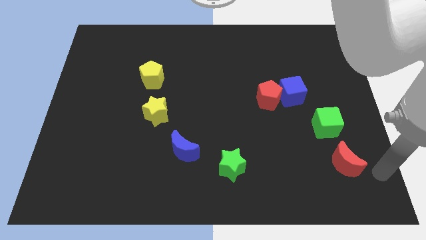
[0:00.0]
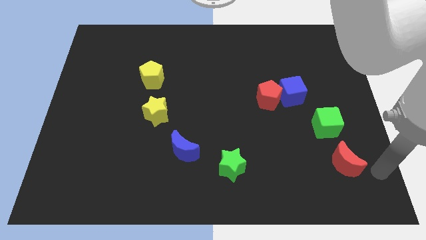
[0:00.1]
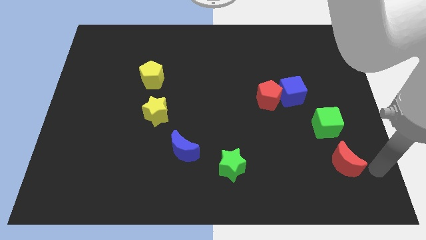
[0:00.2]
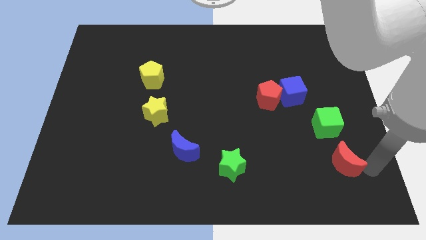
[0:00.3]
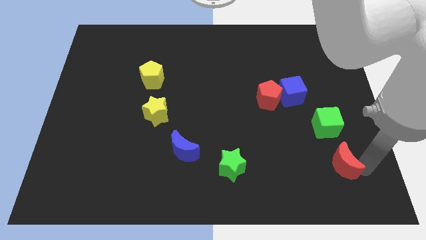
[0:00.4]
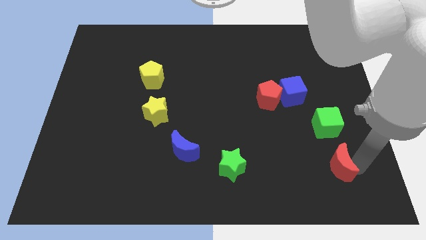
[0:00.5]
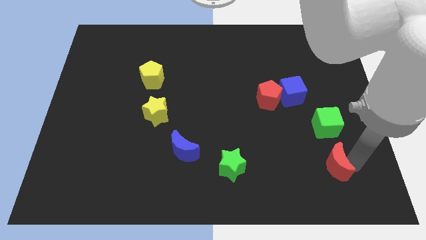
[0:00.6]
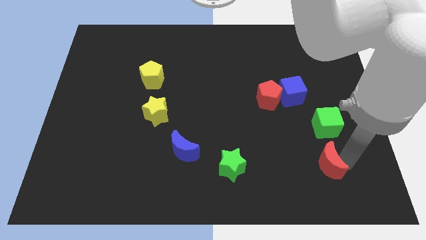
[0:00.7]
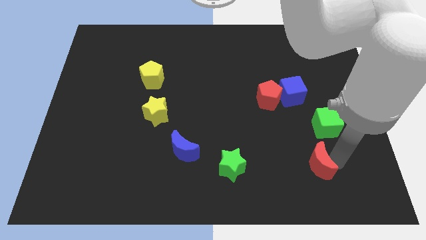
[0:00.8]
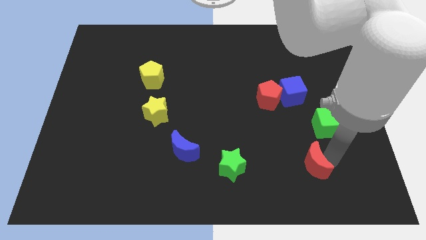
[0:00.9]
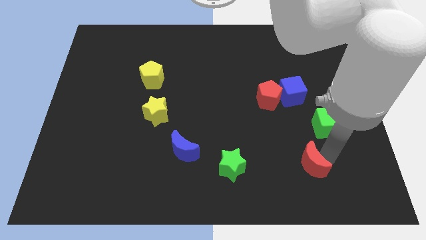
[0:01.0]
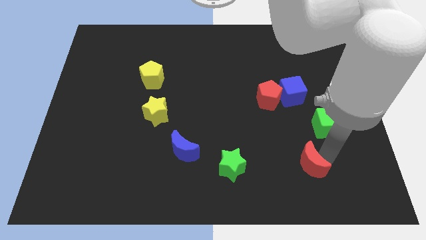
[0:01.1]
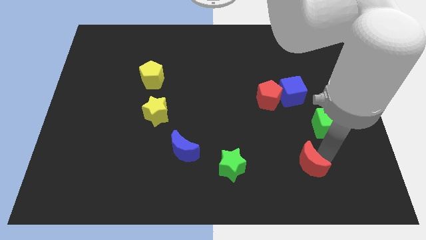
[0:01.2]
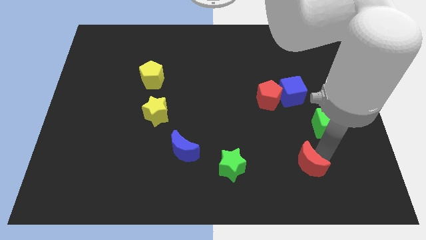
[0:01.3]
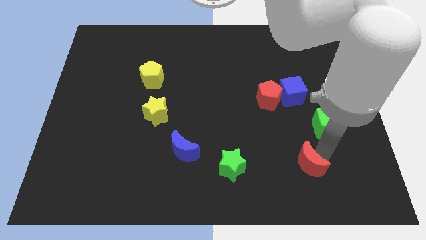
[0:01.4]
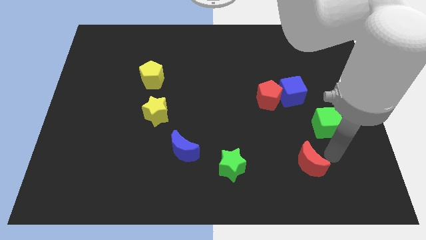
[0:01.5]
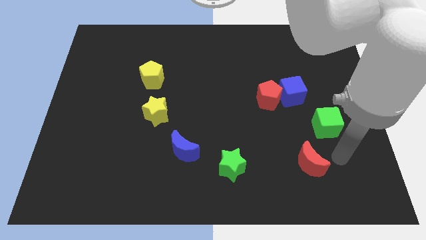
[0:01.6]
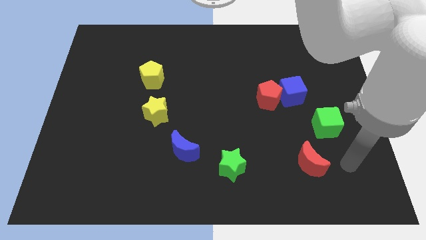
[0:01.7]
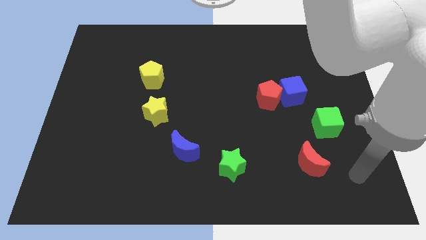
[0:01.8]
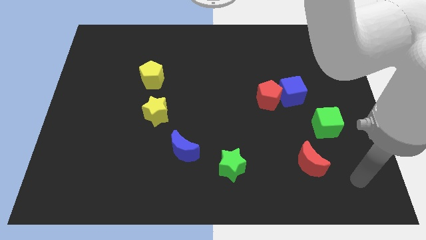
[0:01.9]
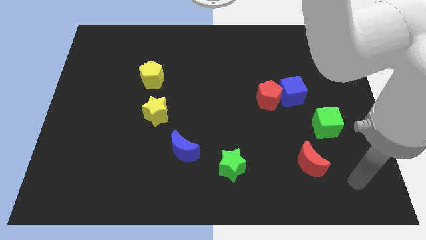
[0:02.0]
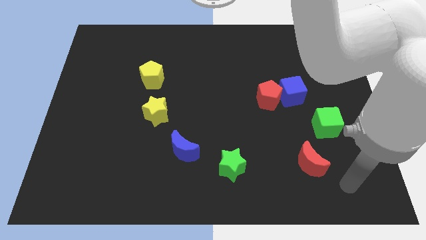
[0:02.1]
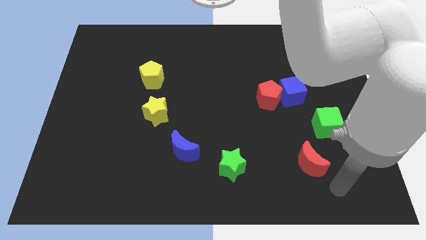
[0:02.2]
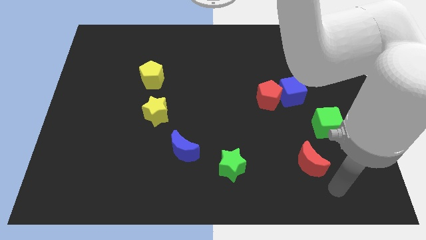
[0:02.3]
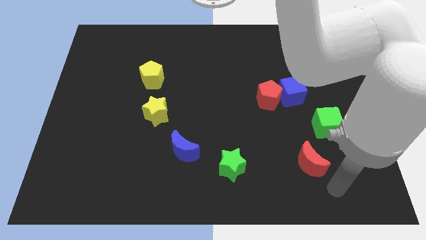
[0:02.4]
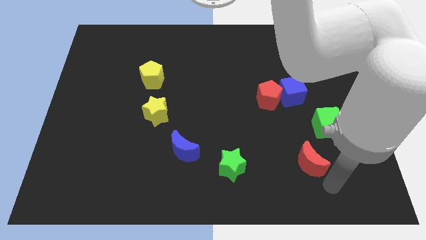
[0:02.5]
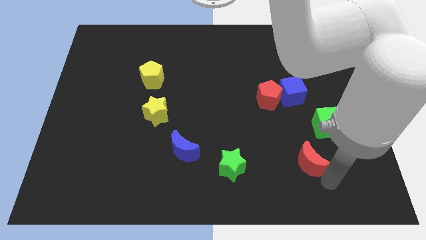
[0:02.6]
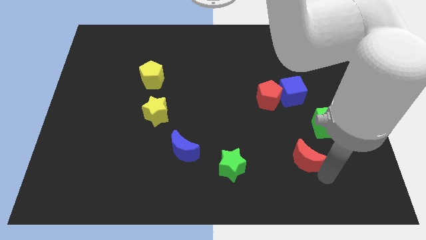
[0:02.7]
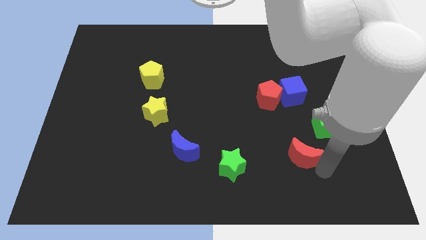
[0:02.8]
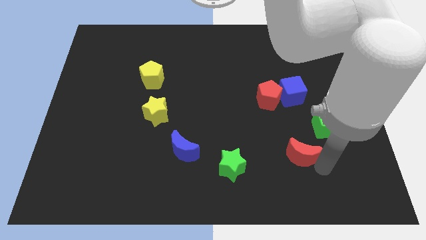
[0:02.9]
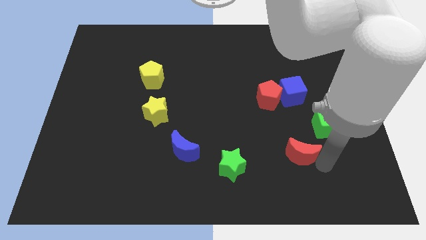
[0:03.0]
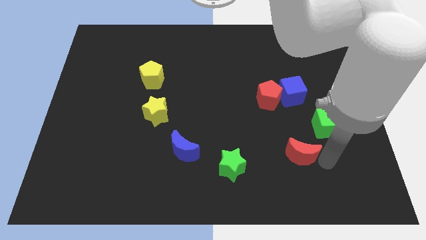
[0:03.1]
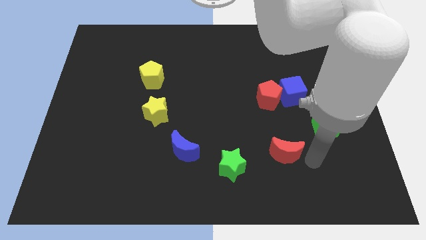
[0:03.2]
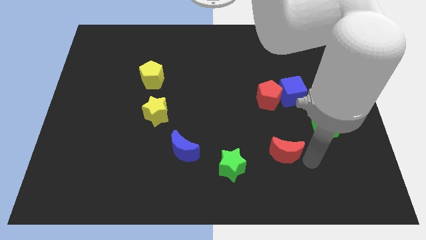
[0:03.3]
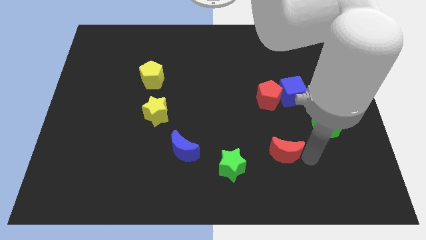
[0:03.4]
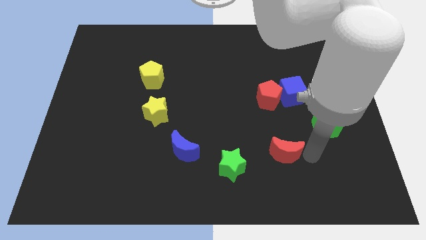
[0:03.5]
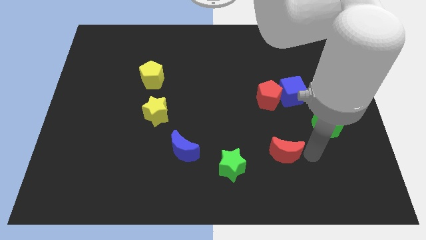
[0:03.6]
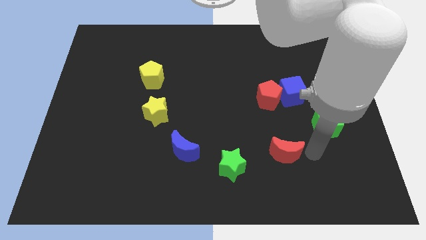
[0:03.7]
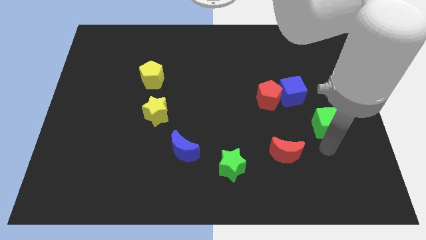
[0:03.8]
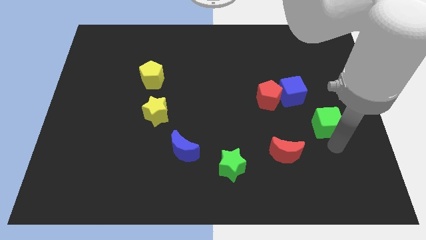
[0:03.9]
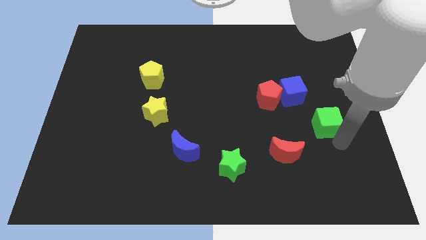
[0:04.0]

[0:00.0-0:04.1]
push the red moon to the vertical bottom side of the red pentagon

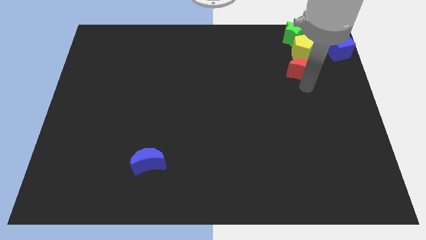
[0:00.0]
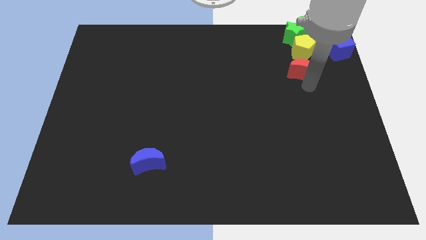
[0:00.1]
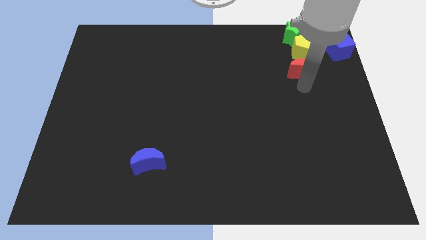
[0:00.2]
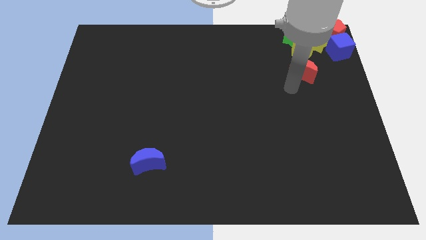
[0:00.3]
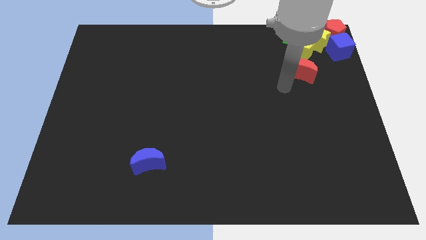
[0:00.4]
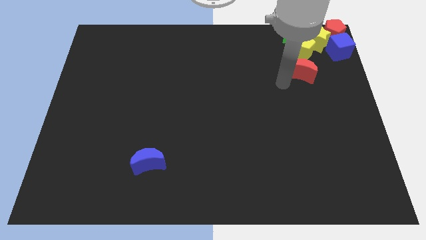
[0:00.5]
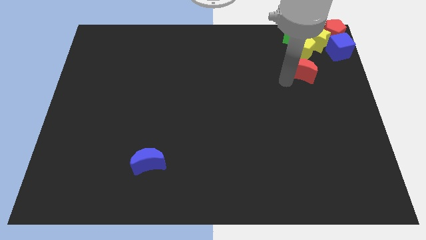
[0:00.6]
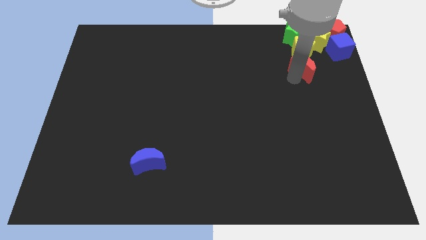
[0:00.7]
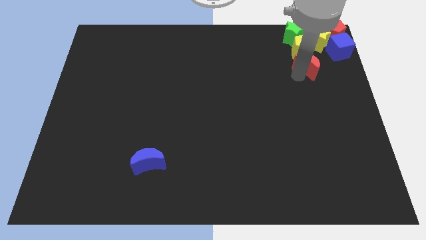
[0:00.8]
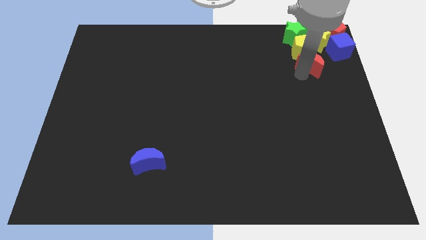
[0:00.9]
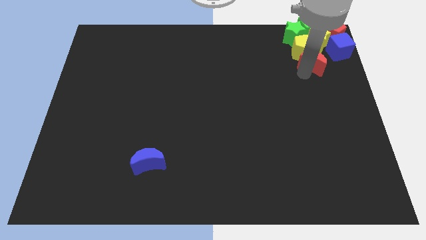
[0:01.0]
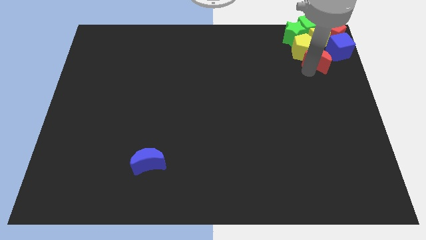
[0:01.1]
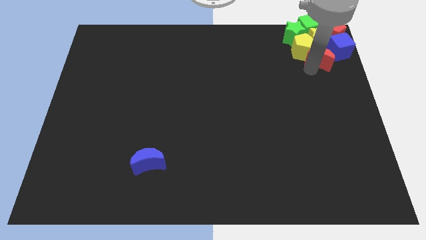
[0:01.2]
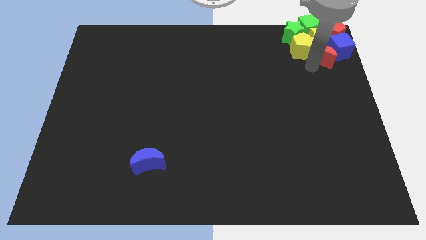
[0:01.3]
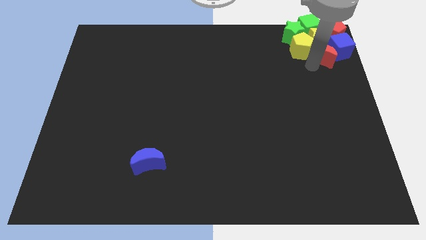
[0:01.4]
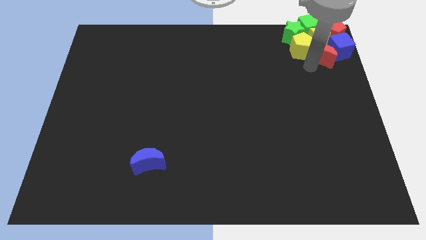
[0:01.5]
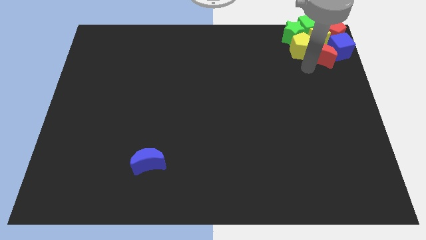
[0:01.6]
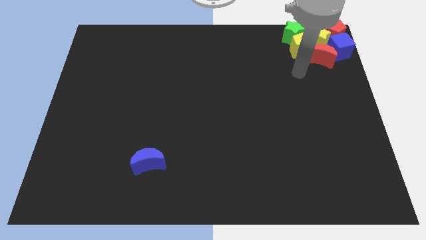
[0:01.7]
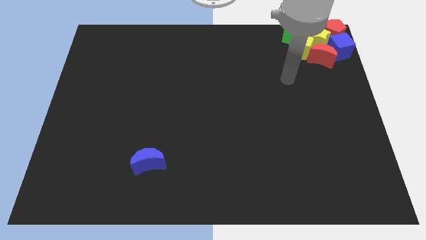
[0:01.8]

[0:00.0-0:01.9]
push the red crescent into the blue cube

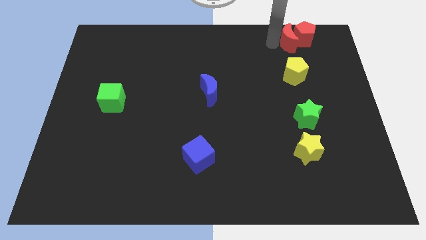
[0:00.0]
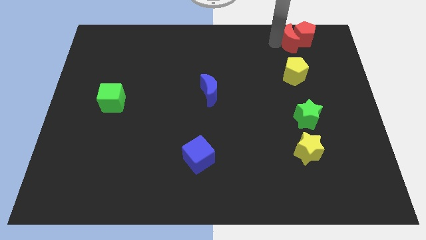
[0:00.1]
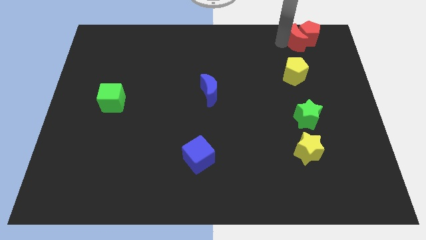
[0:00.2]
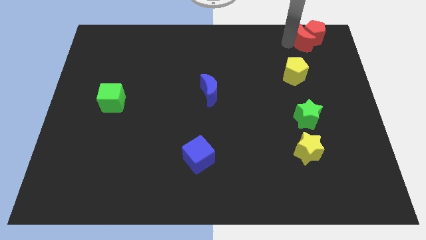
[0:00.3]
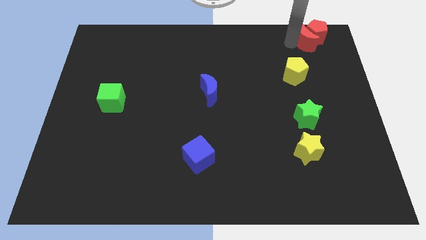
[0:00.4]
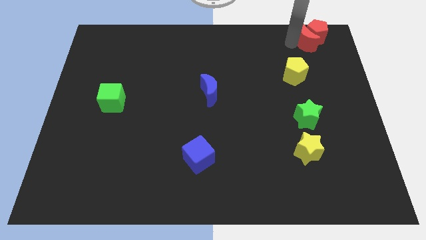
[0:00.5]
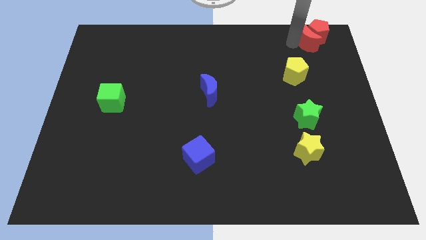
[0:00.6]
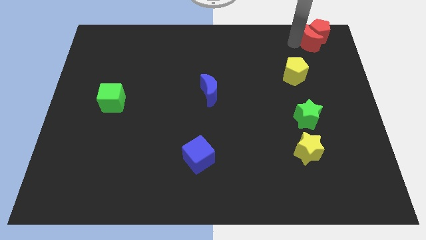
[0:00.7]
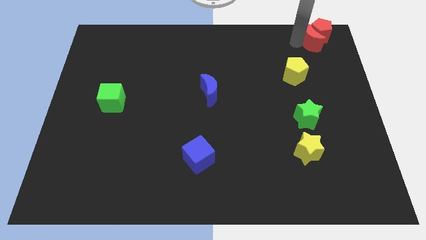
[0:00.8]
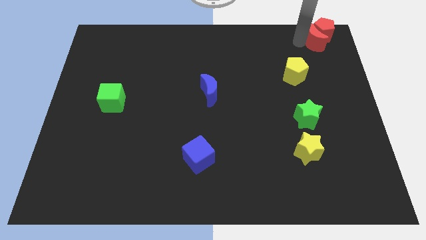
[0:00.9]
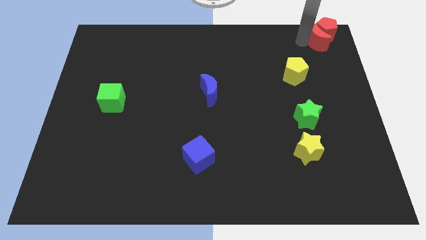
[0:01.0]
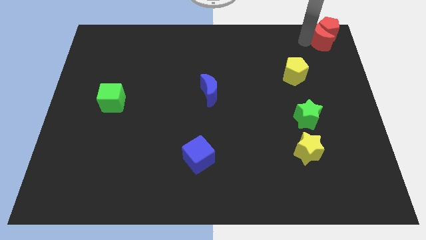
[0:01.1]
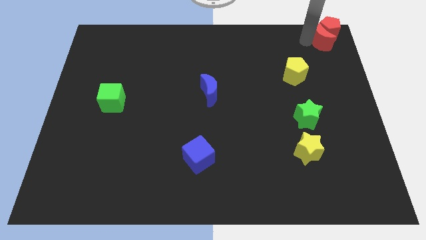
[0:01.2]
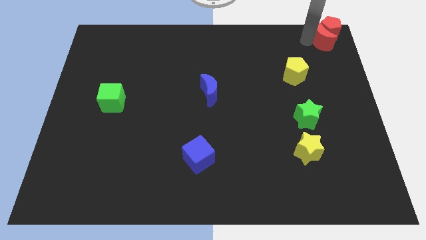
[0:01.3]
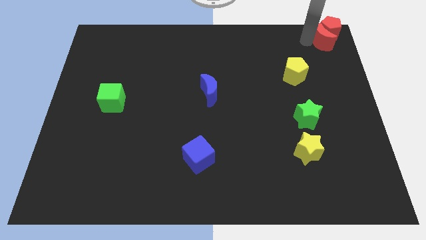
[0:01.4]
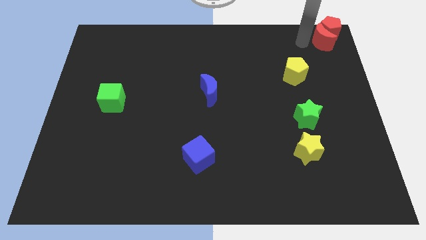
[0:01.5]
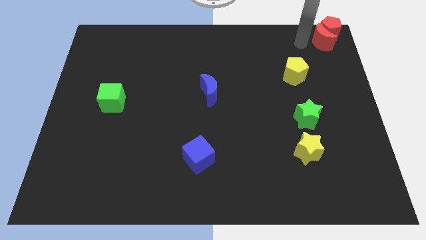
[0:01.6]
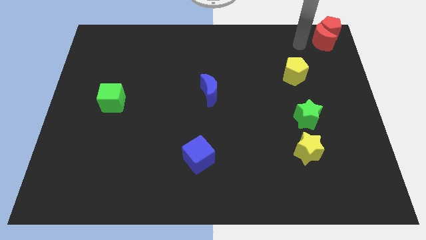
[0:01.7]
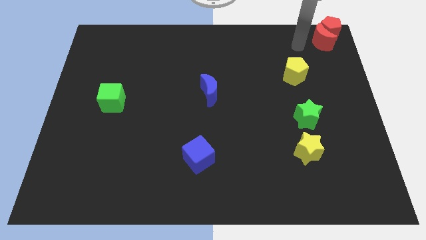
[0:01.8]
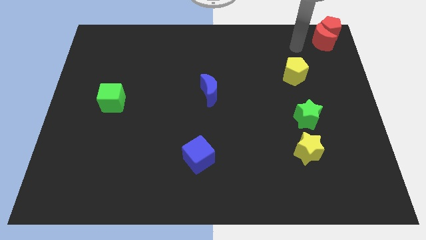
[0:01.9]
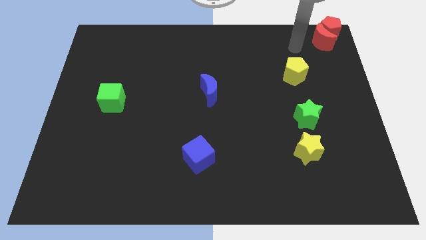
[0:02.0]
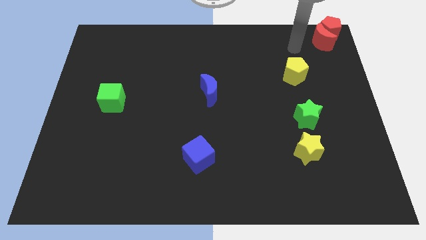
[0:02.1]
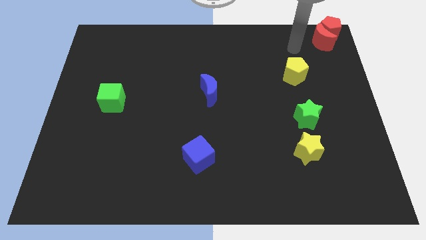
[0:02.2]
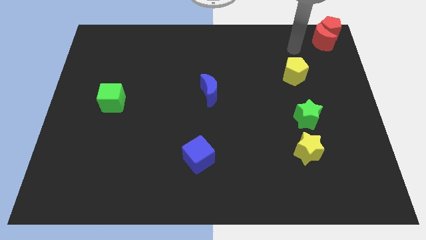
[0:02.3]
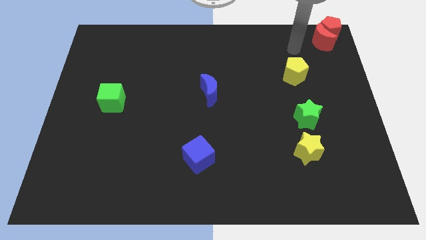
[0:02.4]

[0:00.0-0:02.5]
move the red crescent and red pentagon towards the top right of the board

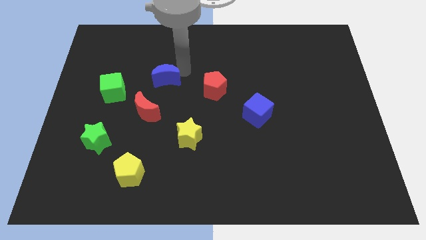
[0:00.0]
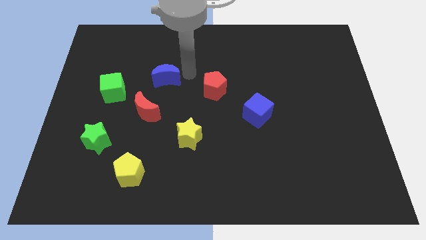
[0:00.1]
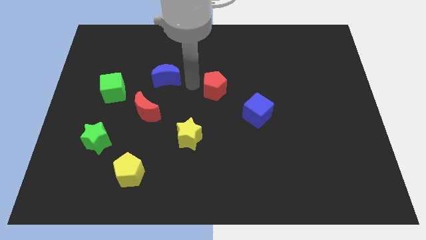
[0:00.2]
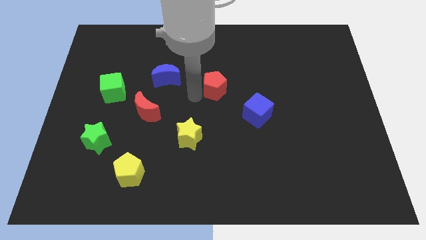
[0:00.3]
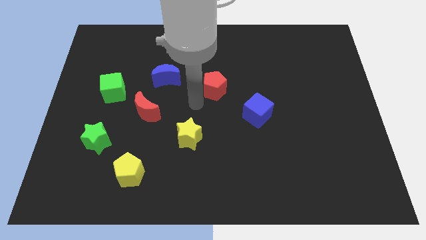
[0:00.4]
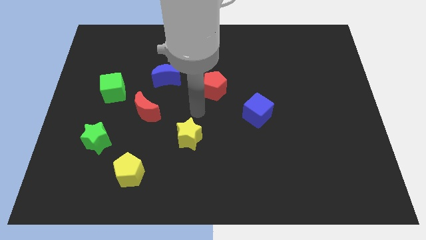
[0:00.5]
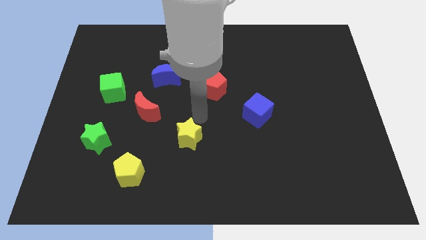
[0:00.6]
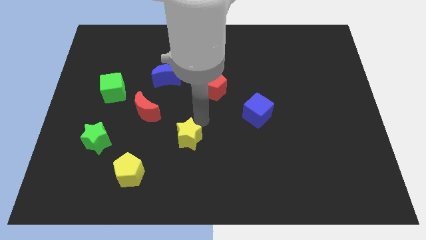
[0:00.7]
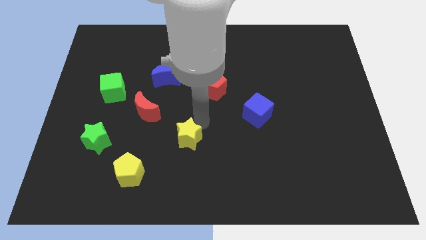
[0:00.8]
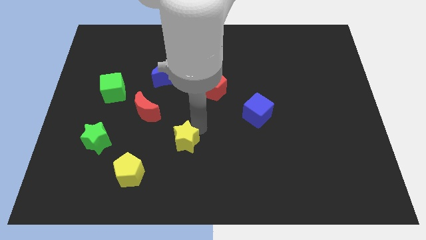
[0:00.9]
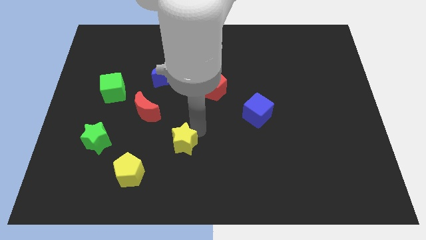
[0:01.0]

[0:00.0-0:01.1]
place your arm at the top right side of the yellow star
